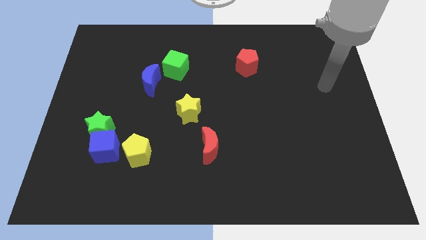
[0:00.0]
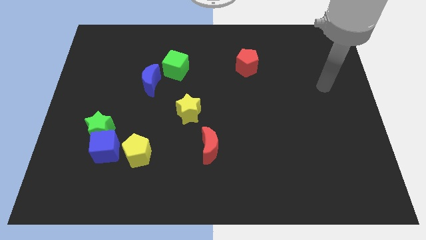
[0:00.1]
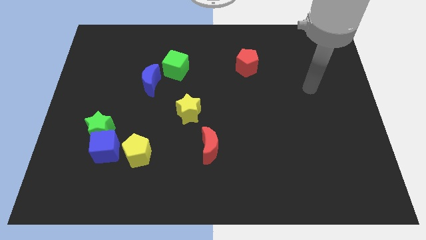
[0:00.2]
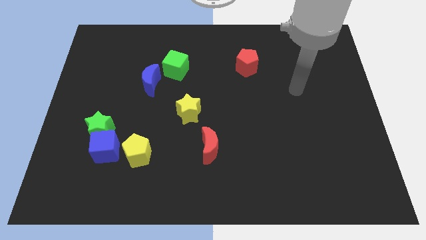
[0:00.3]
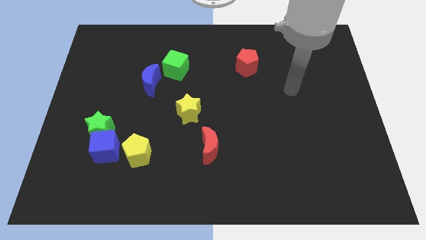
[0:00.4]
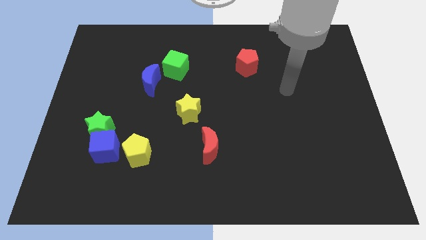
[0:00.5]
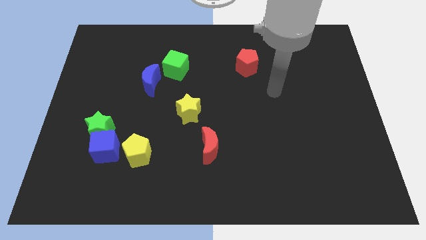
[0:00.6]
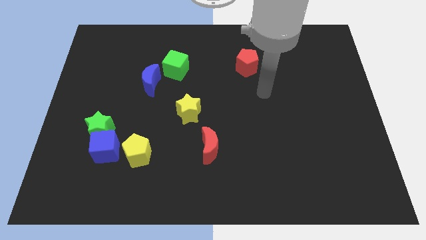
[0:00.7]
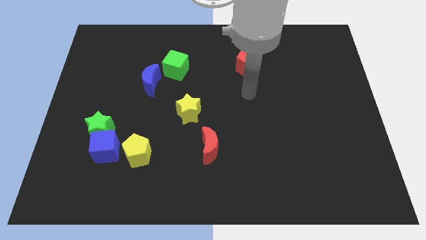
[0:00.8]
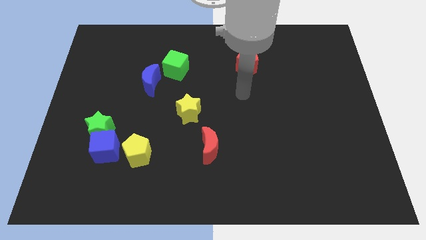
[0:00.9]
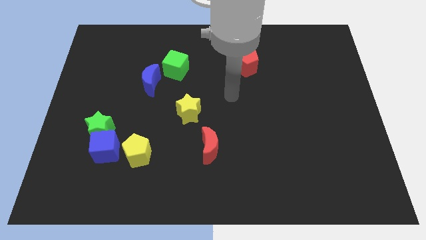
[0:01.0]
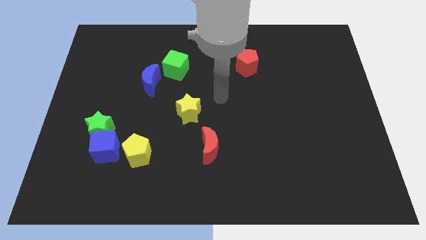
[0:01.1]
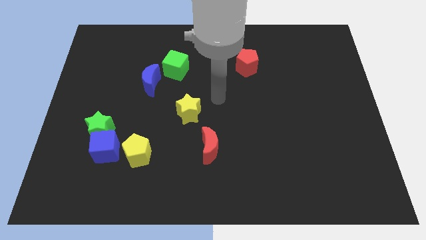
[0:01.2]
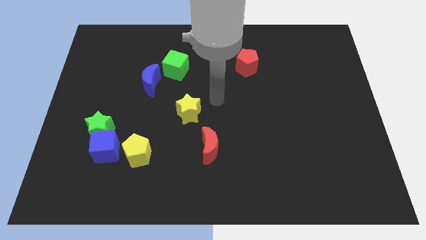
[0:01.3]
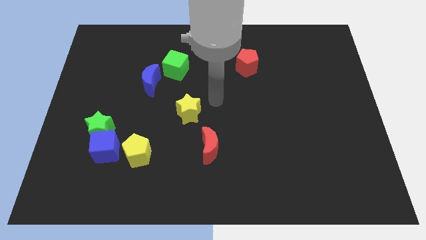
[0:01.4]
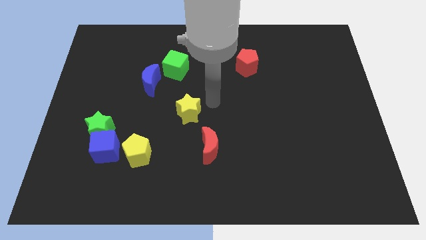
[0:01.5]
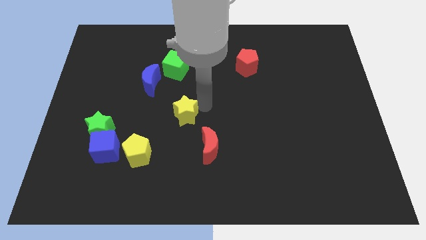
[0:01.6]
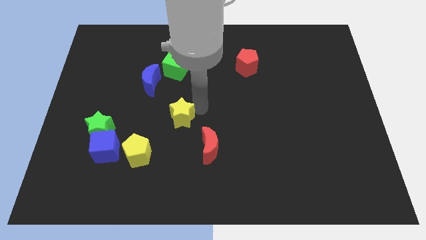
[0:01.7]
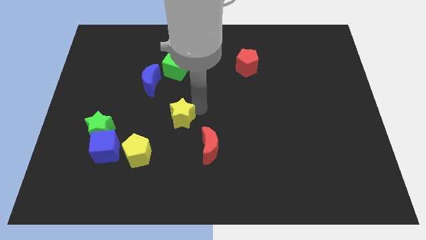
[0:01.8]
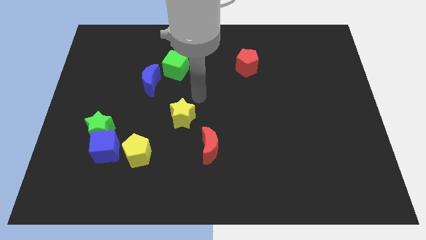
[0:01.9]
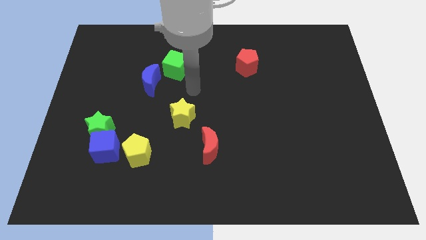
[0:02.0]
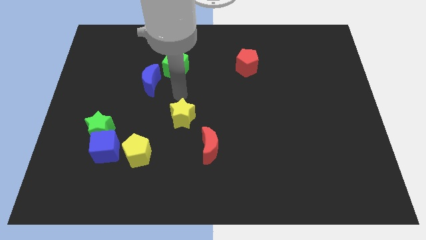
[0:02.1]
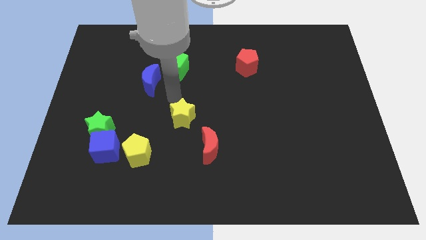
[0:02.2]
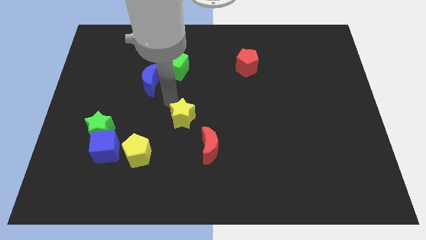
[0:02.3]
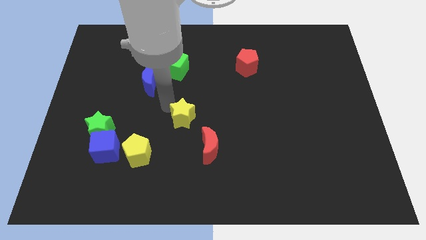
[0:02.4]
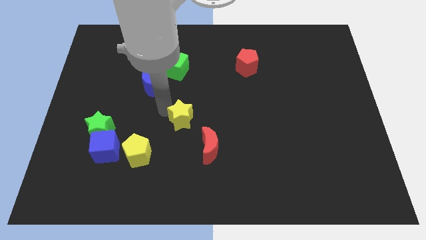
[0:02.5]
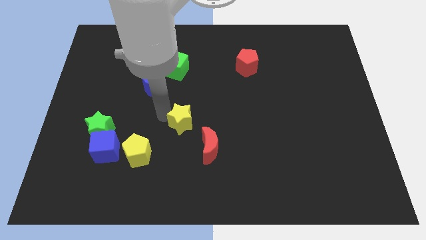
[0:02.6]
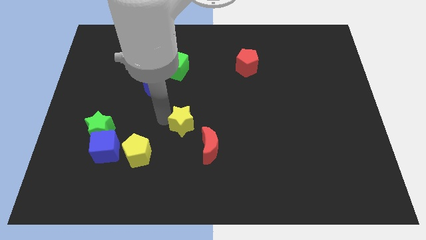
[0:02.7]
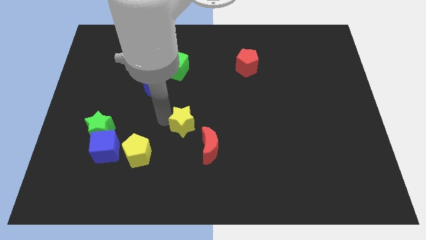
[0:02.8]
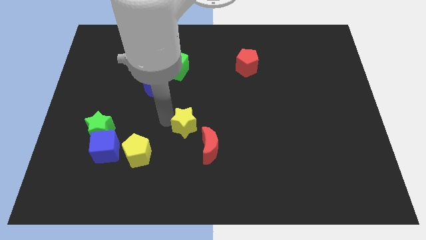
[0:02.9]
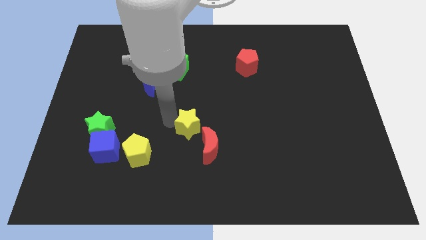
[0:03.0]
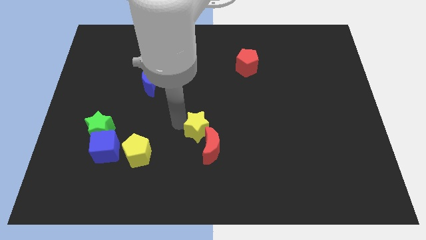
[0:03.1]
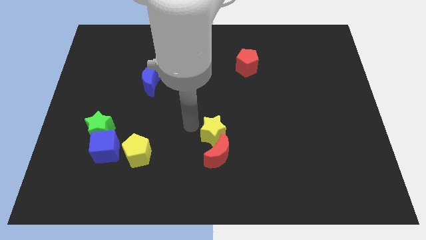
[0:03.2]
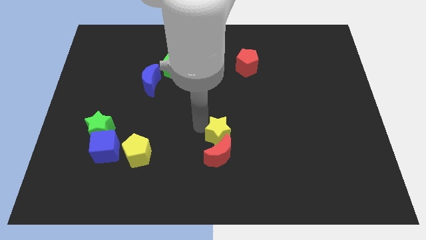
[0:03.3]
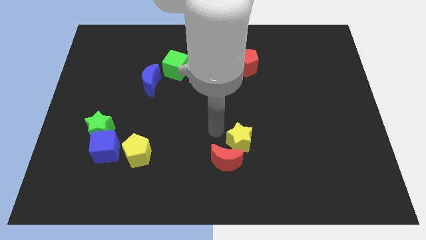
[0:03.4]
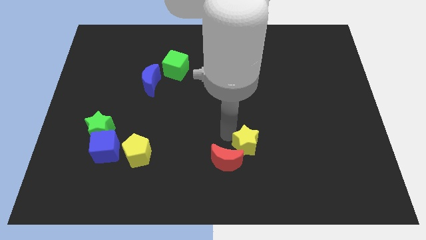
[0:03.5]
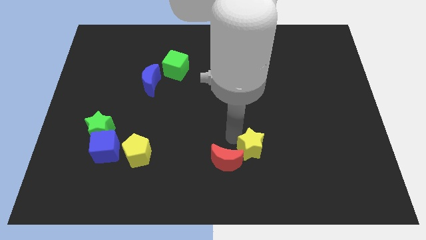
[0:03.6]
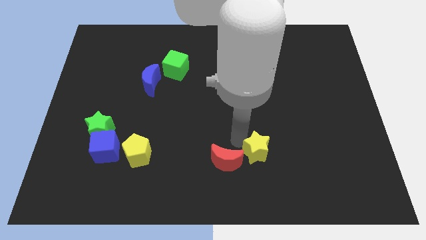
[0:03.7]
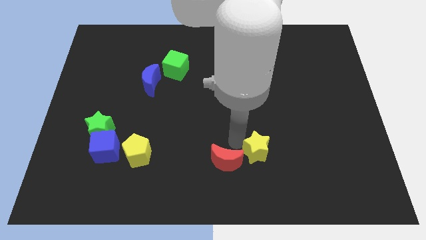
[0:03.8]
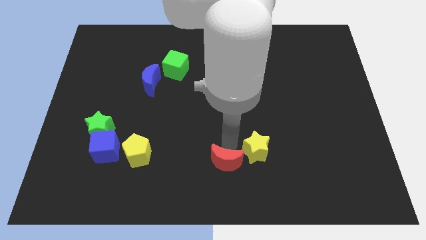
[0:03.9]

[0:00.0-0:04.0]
place the yellow star right to the red crescent

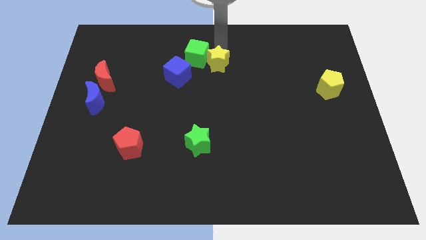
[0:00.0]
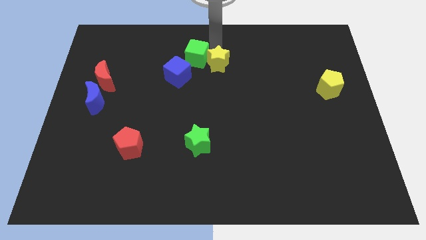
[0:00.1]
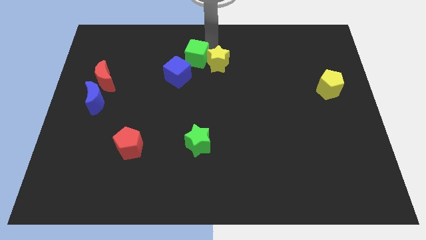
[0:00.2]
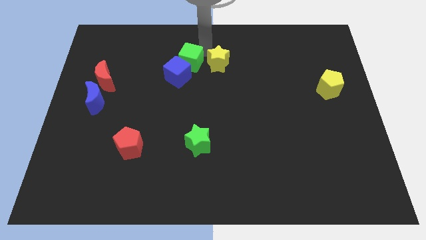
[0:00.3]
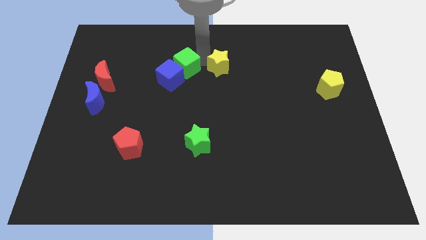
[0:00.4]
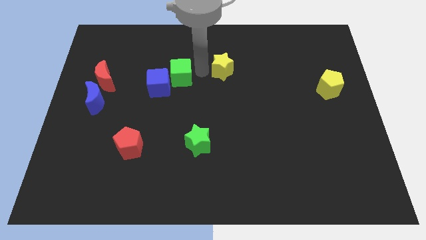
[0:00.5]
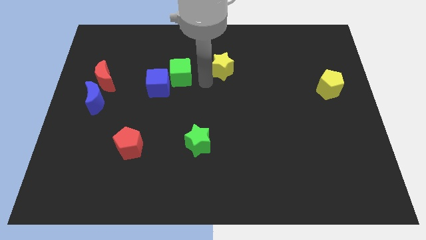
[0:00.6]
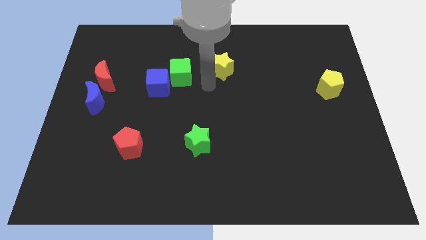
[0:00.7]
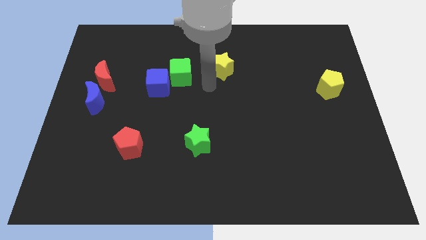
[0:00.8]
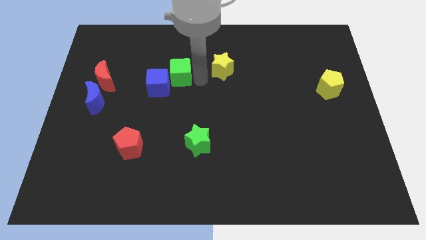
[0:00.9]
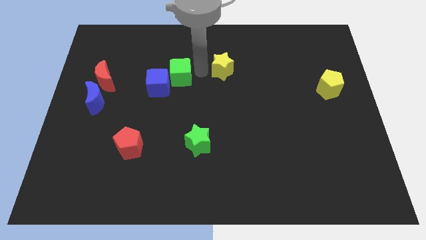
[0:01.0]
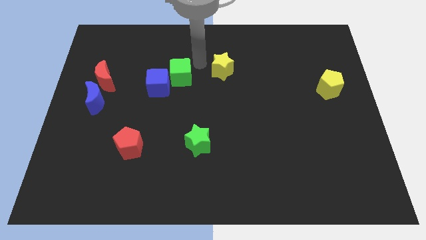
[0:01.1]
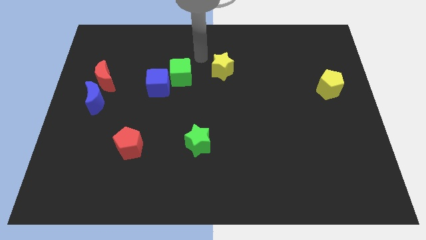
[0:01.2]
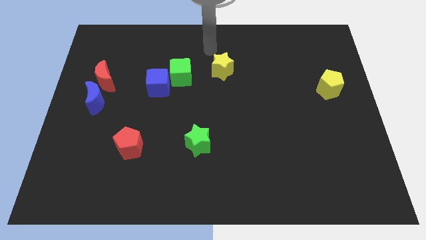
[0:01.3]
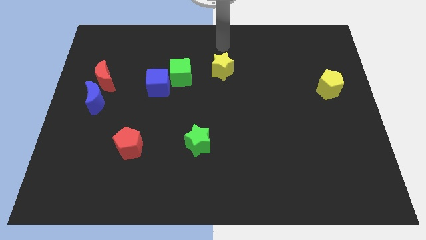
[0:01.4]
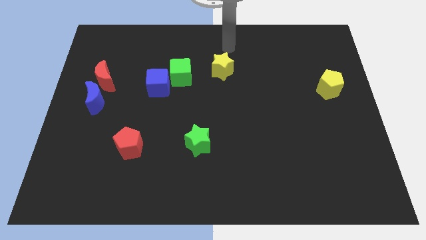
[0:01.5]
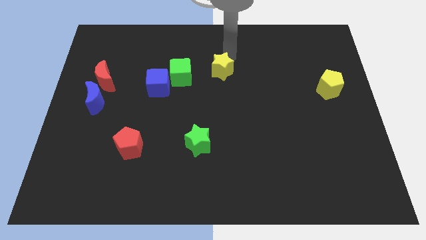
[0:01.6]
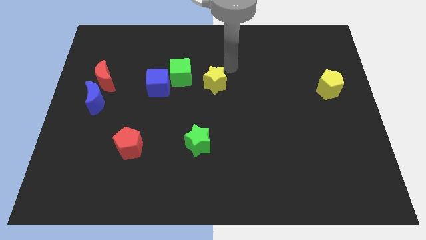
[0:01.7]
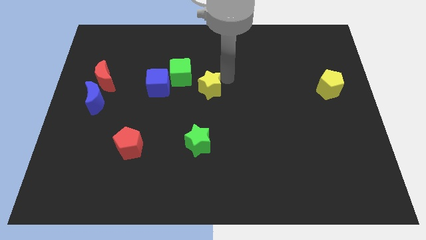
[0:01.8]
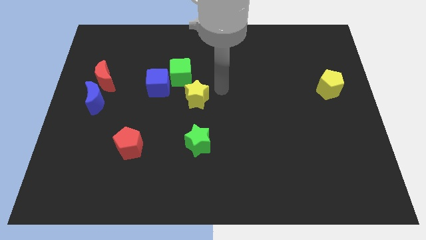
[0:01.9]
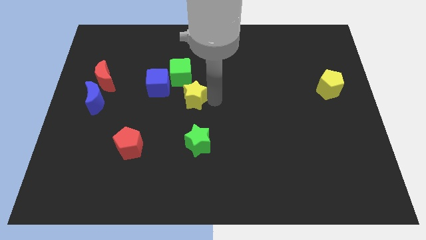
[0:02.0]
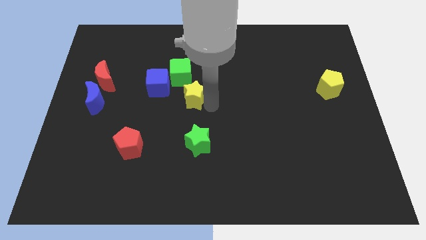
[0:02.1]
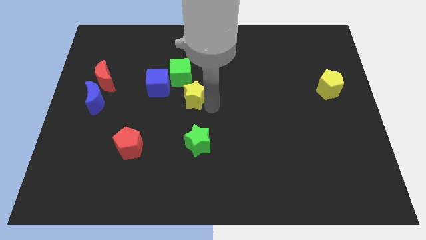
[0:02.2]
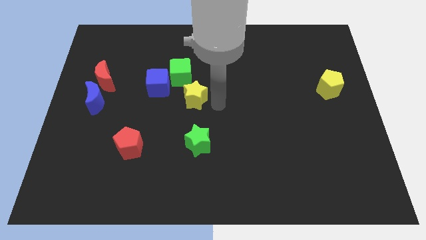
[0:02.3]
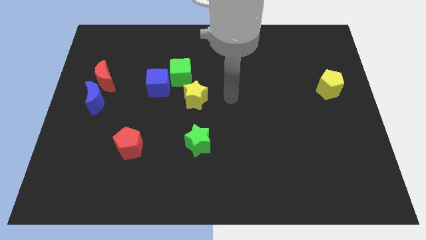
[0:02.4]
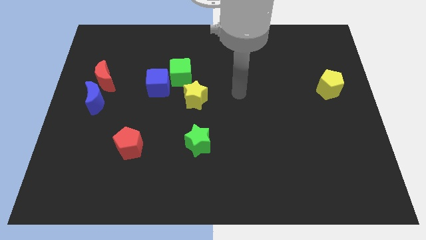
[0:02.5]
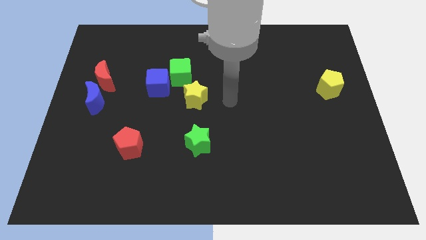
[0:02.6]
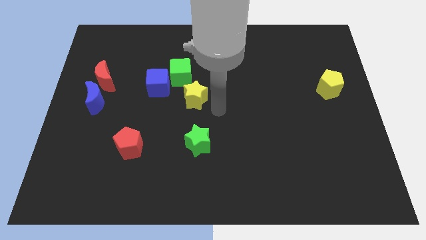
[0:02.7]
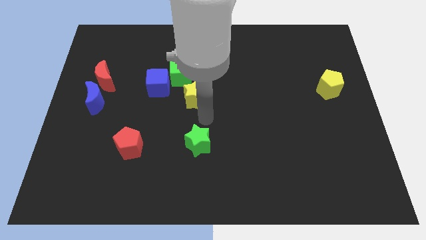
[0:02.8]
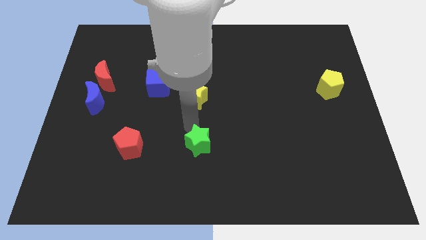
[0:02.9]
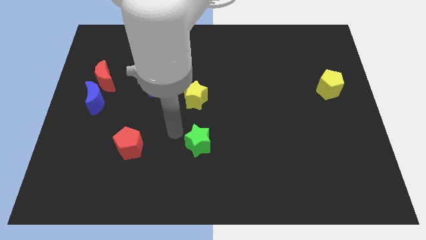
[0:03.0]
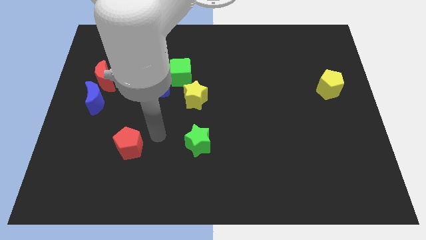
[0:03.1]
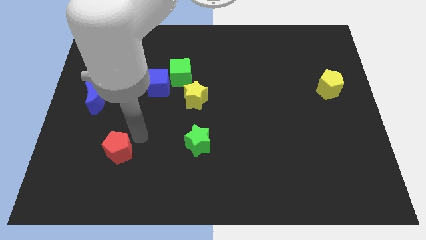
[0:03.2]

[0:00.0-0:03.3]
move the yellow star below the green cube

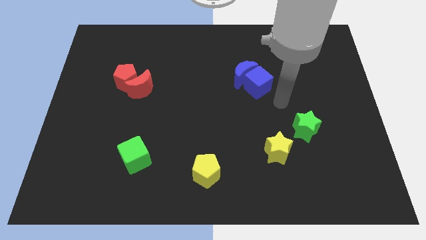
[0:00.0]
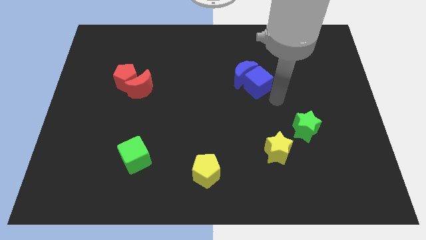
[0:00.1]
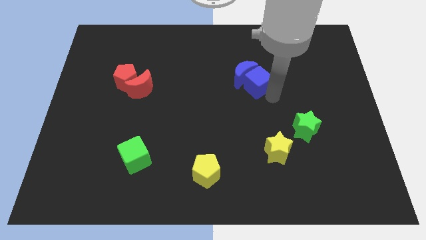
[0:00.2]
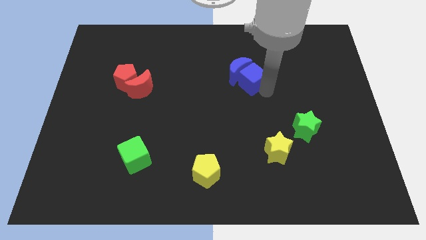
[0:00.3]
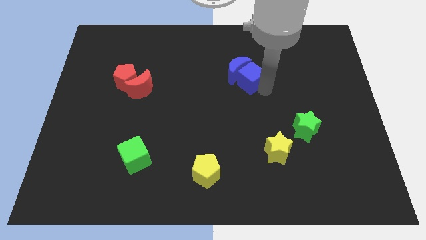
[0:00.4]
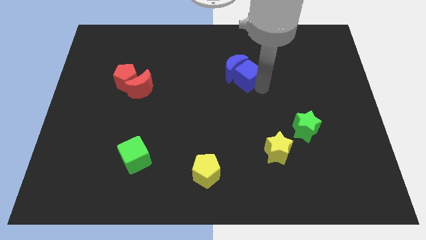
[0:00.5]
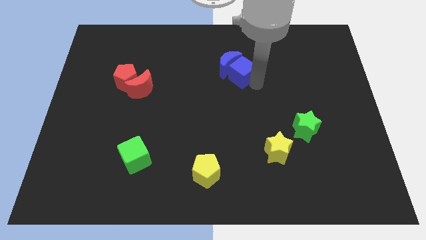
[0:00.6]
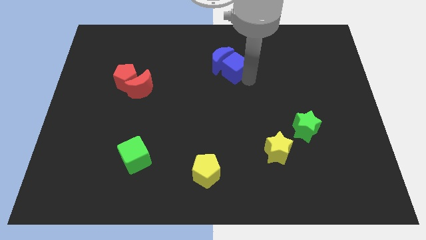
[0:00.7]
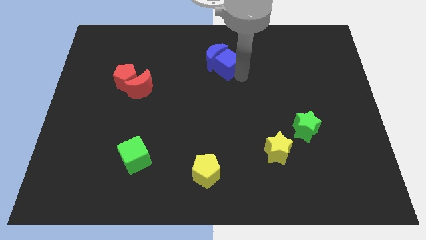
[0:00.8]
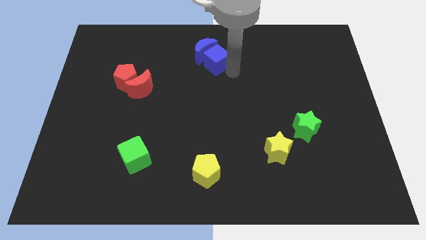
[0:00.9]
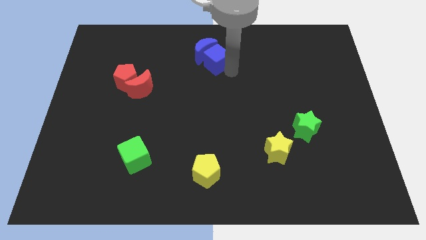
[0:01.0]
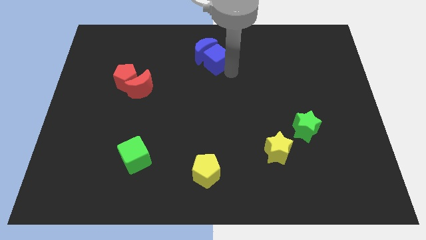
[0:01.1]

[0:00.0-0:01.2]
place the blue blocks above the yellow pentagon

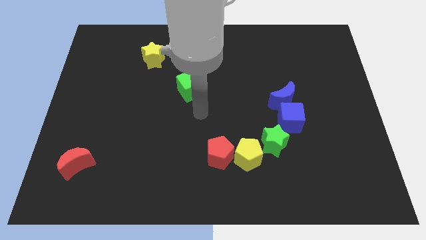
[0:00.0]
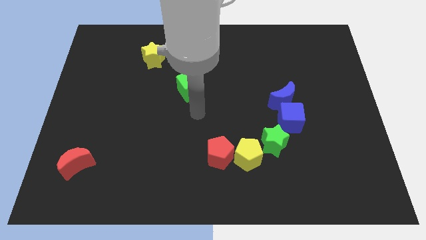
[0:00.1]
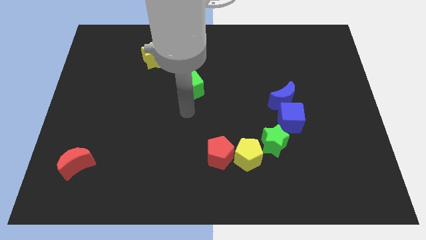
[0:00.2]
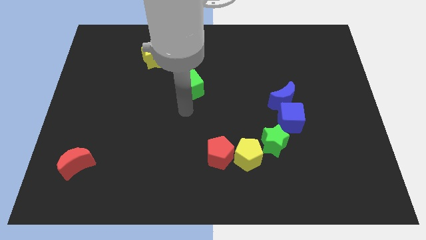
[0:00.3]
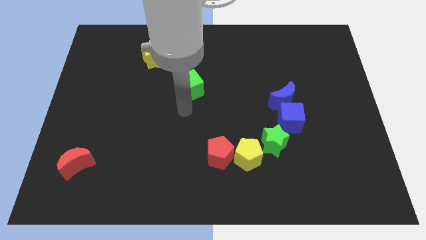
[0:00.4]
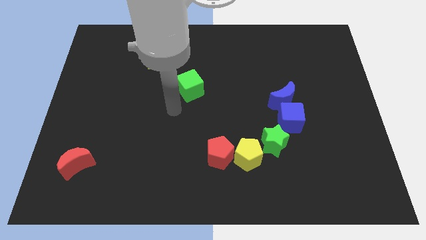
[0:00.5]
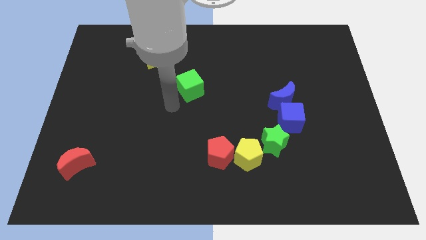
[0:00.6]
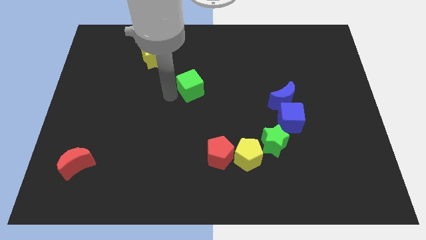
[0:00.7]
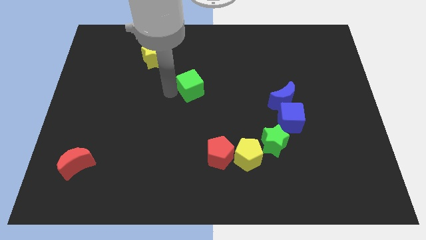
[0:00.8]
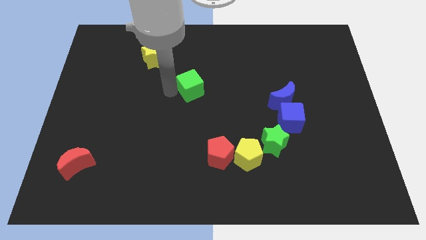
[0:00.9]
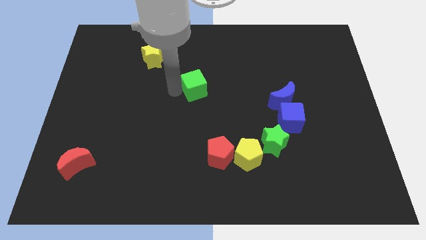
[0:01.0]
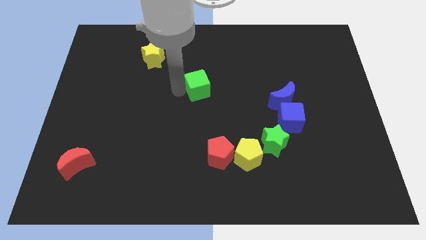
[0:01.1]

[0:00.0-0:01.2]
push the green cube towards the center of the board
